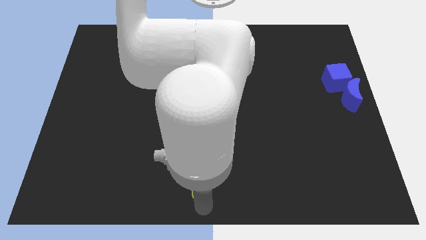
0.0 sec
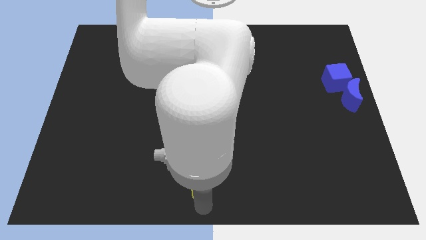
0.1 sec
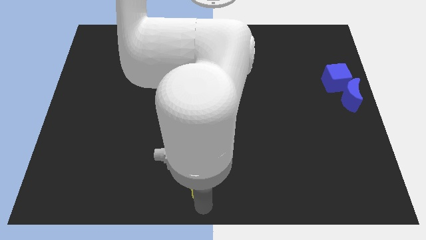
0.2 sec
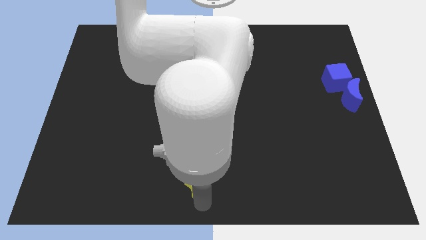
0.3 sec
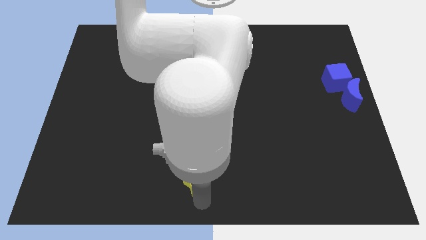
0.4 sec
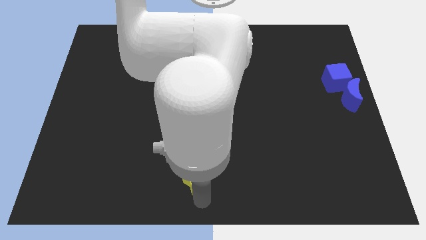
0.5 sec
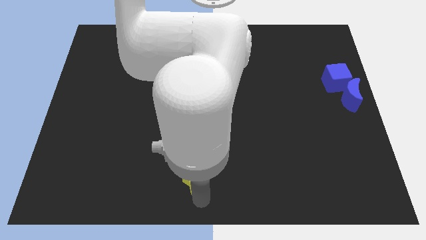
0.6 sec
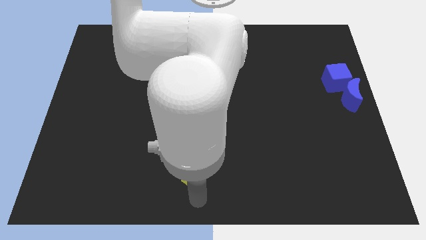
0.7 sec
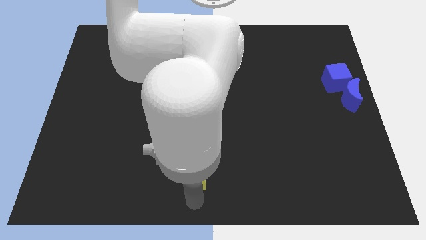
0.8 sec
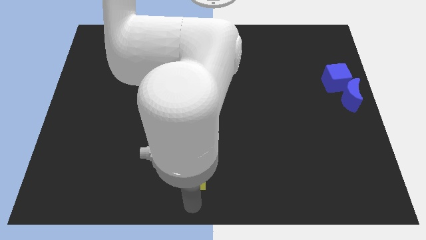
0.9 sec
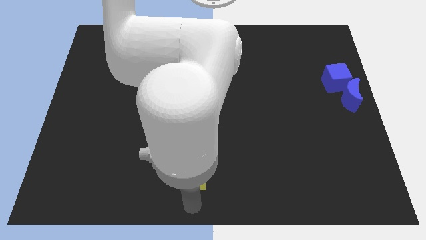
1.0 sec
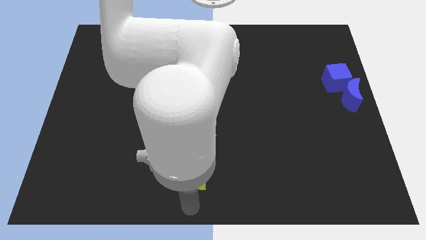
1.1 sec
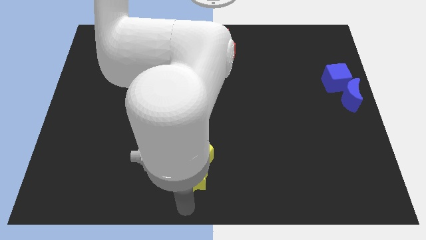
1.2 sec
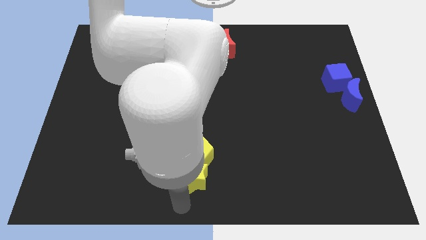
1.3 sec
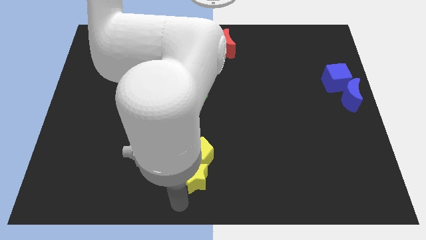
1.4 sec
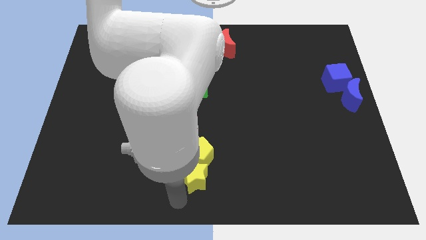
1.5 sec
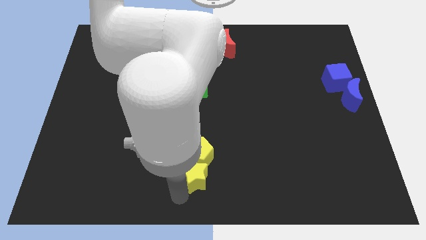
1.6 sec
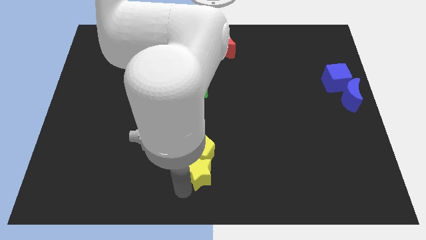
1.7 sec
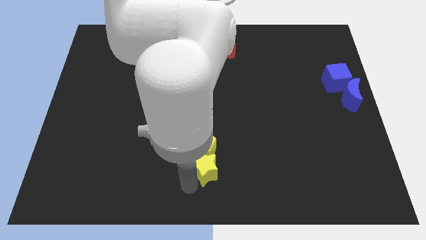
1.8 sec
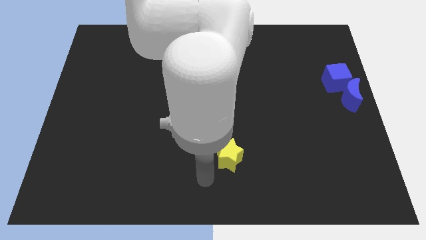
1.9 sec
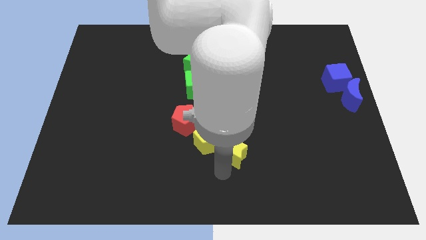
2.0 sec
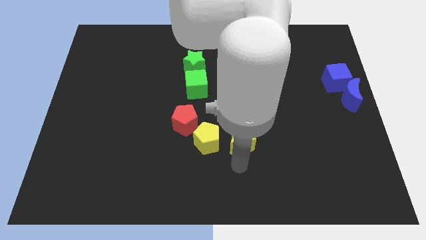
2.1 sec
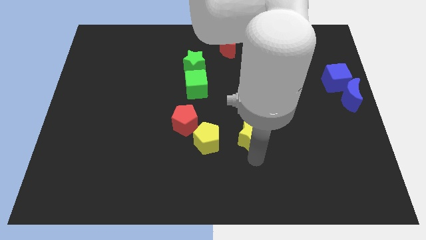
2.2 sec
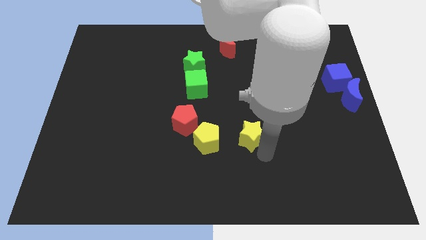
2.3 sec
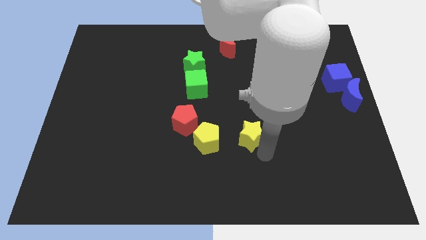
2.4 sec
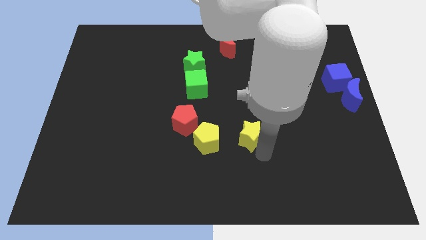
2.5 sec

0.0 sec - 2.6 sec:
push yellow star beside yellow pentagon

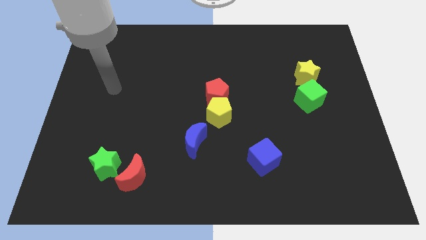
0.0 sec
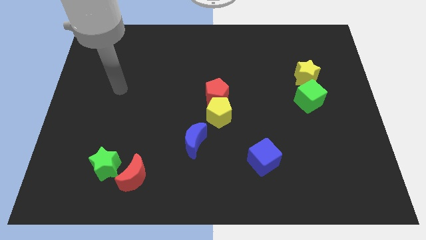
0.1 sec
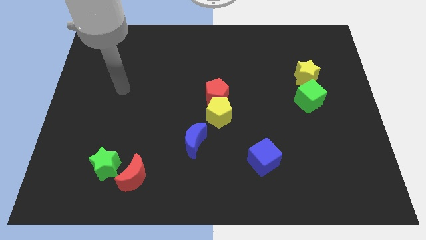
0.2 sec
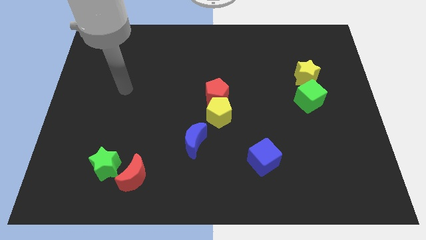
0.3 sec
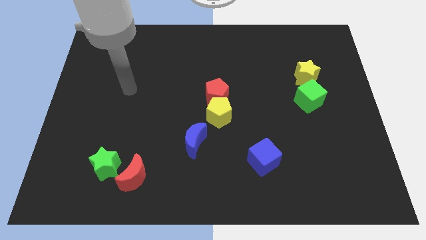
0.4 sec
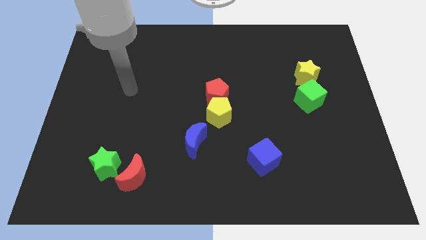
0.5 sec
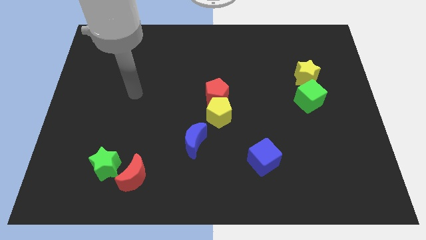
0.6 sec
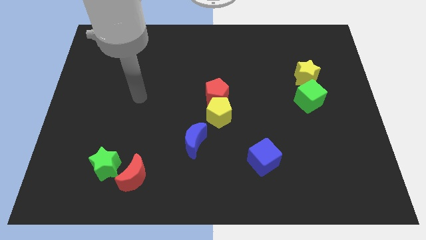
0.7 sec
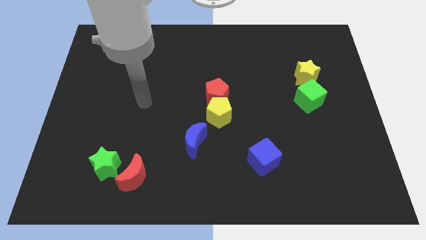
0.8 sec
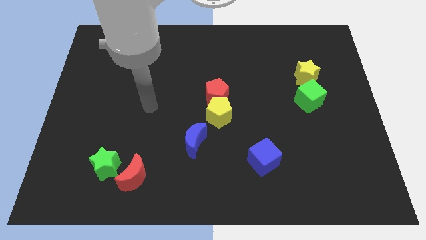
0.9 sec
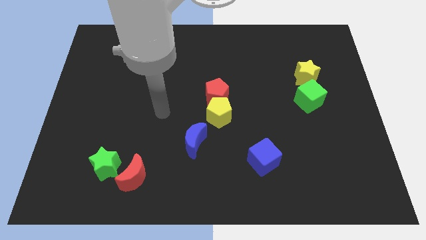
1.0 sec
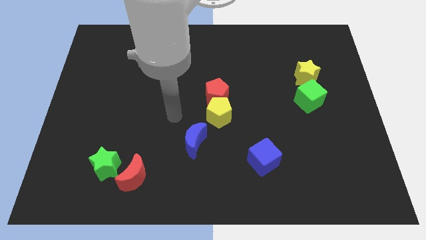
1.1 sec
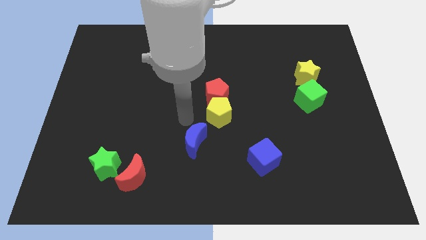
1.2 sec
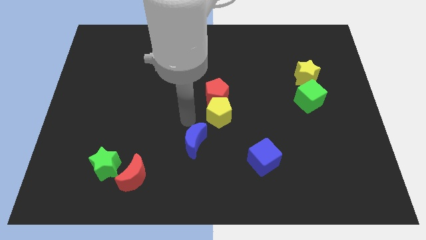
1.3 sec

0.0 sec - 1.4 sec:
point your arm at the top of the blue crescent

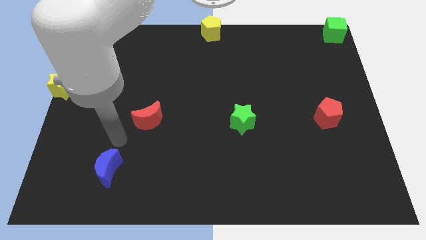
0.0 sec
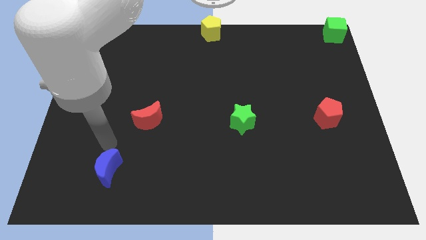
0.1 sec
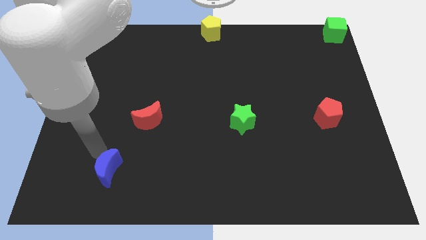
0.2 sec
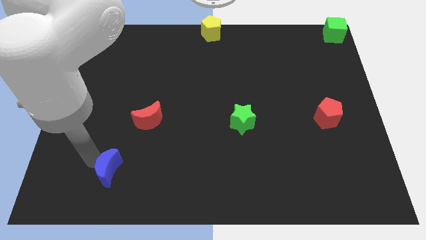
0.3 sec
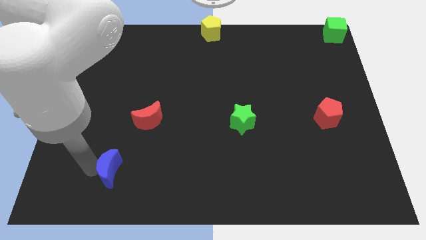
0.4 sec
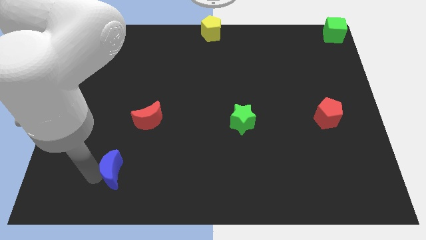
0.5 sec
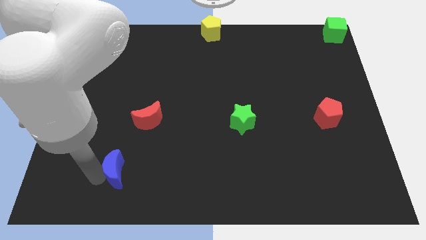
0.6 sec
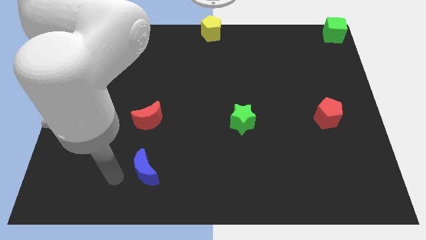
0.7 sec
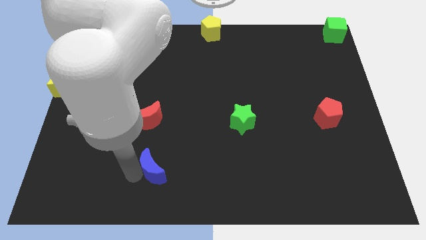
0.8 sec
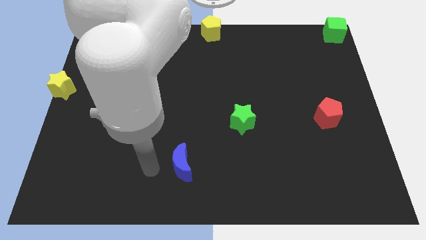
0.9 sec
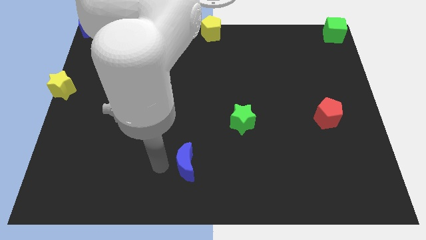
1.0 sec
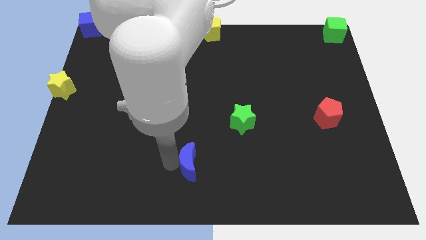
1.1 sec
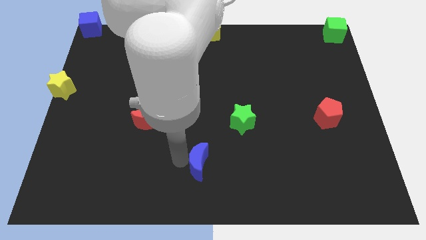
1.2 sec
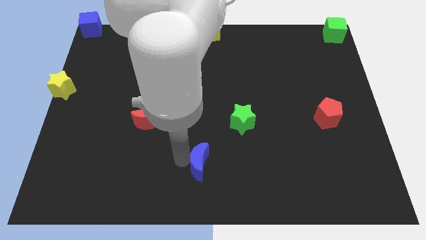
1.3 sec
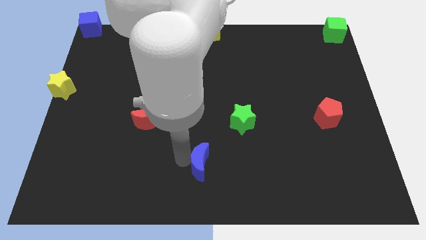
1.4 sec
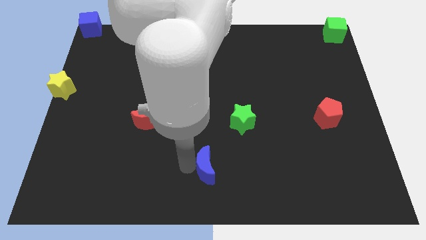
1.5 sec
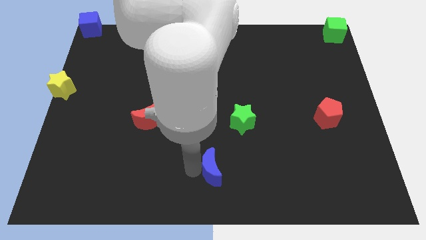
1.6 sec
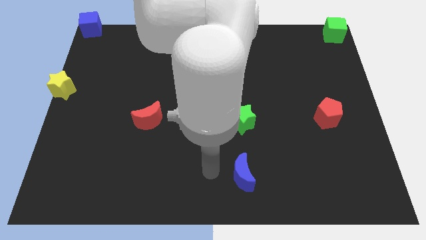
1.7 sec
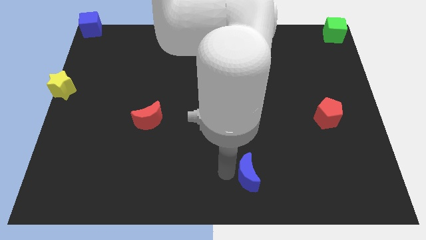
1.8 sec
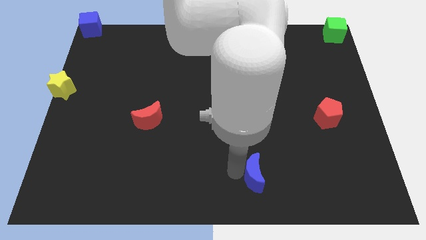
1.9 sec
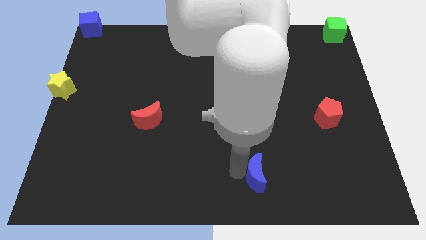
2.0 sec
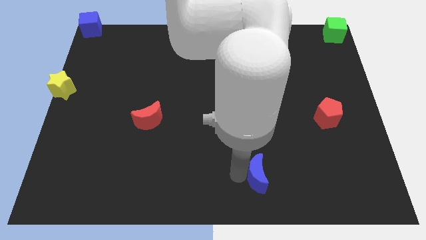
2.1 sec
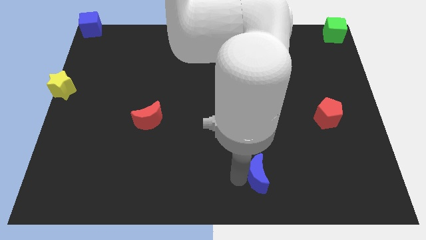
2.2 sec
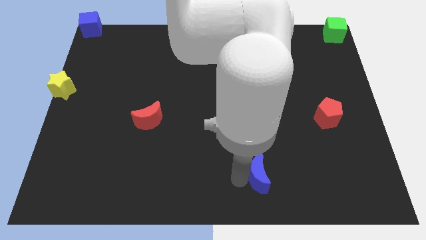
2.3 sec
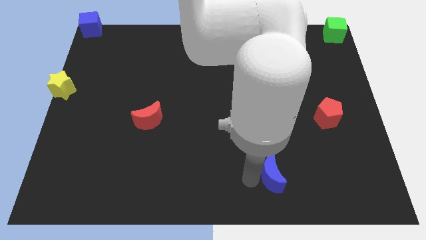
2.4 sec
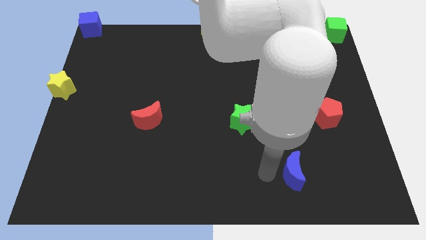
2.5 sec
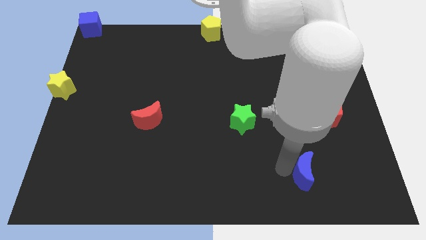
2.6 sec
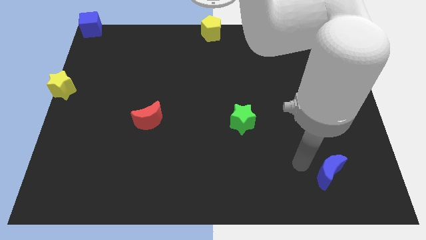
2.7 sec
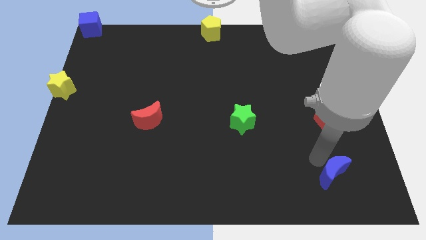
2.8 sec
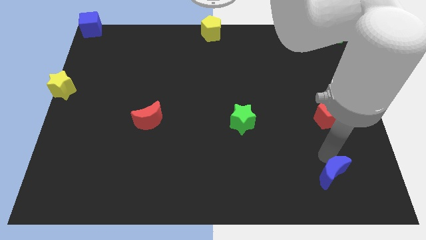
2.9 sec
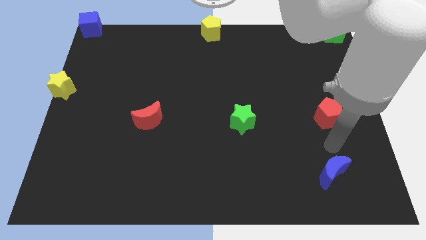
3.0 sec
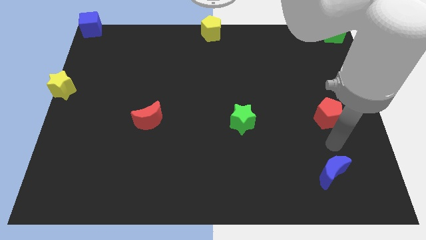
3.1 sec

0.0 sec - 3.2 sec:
place the blue moon vertically to the bottom side of the red pentagon

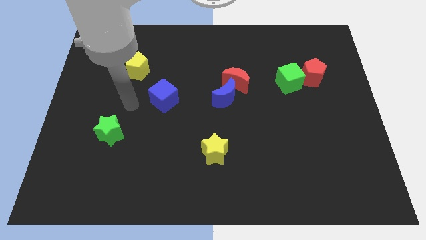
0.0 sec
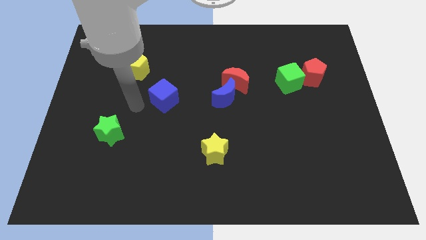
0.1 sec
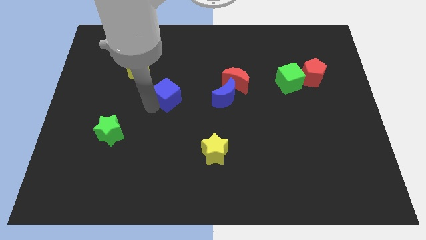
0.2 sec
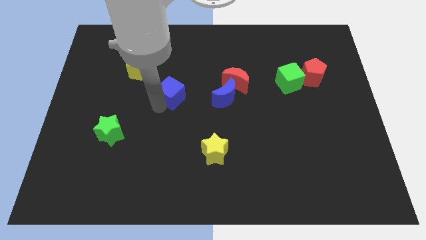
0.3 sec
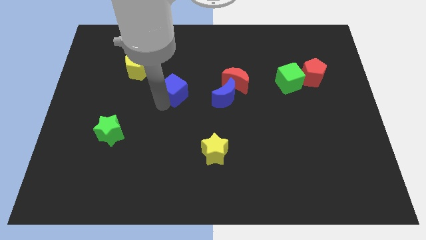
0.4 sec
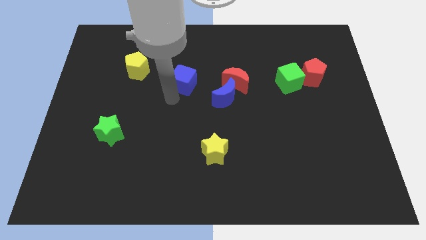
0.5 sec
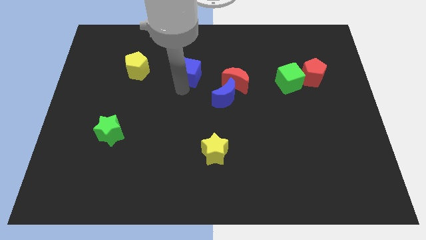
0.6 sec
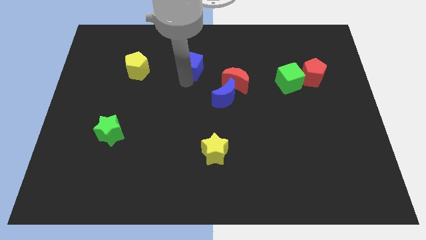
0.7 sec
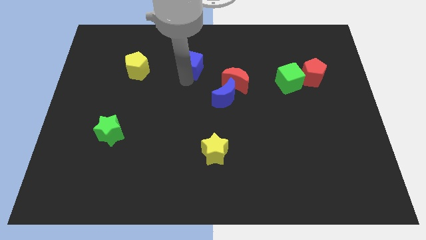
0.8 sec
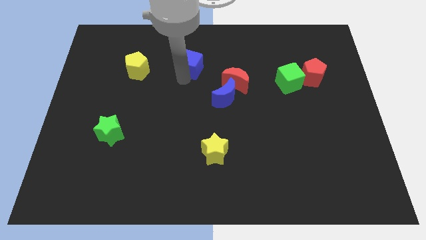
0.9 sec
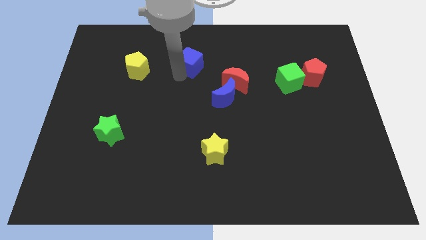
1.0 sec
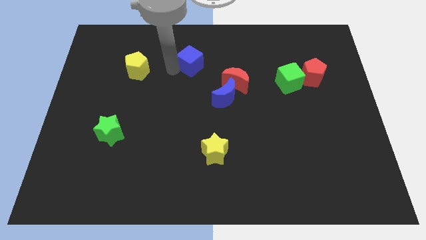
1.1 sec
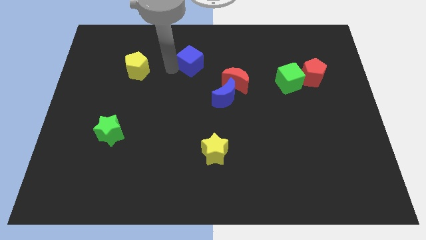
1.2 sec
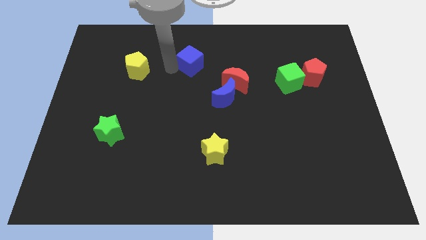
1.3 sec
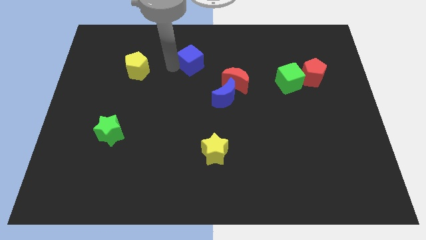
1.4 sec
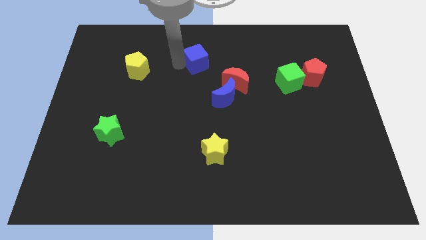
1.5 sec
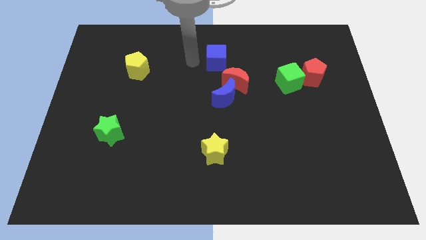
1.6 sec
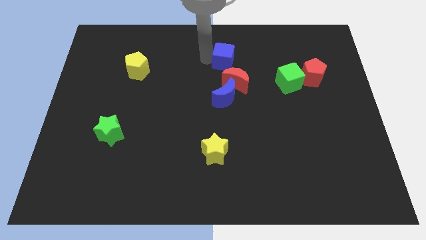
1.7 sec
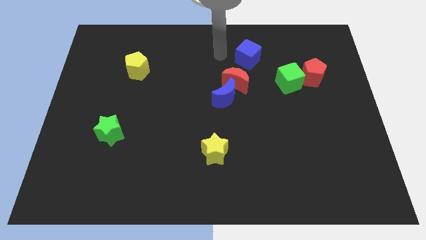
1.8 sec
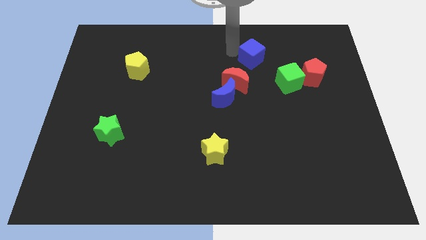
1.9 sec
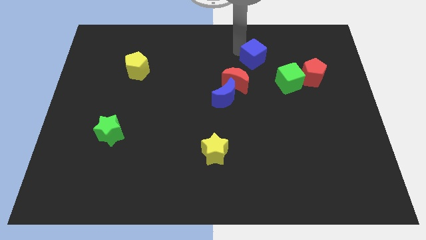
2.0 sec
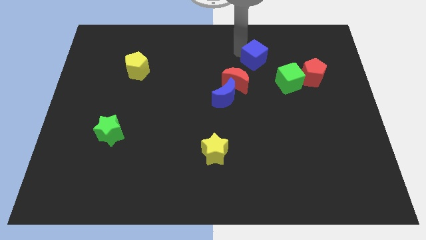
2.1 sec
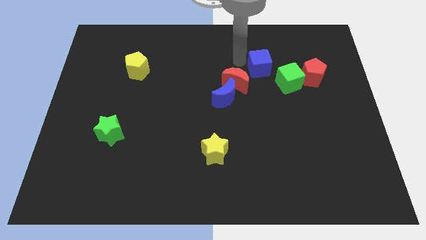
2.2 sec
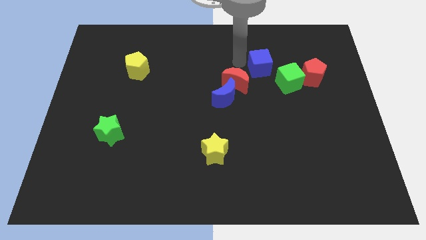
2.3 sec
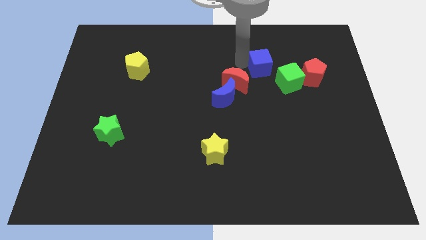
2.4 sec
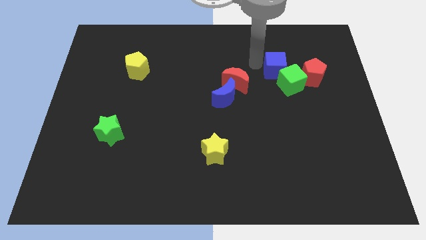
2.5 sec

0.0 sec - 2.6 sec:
push the blue cube into green cube
